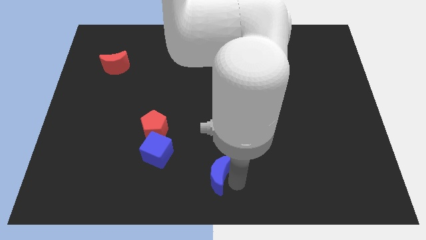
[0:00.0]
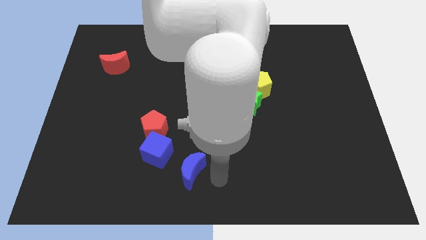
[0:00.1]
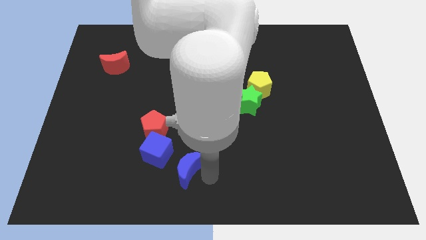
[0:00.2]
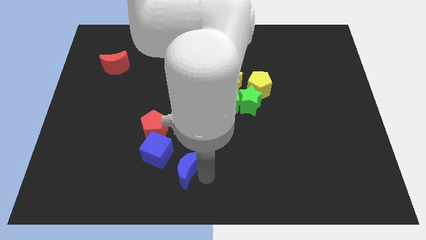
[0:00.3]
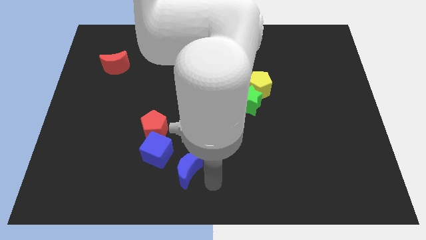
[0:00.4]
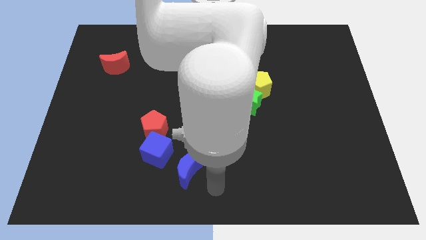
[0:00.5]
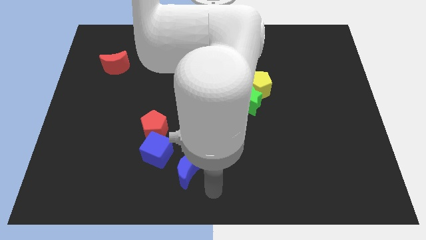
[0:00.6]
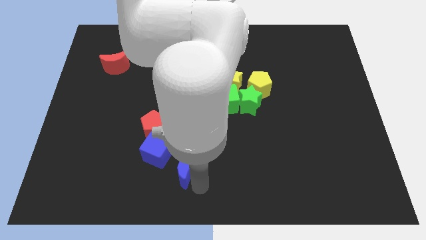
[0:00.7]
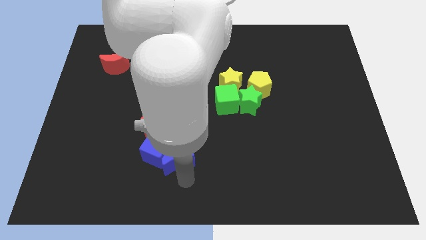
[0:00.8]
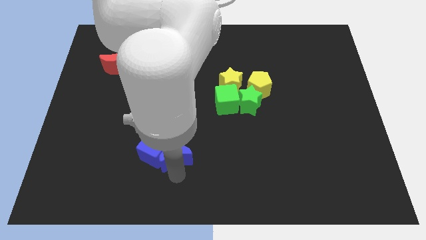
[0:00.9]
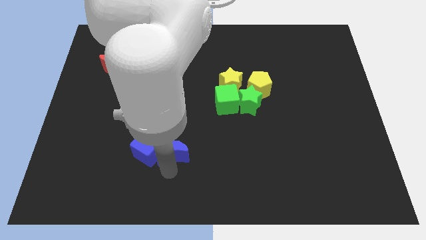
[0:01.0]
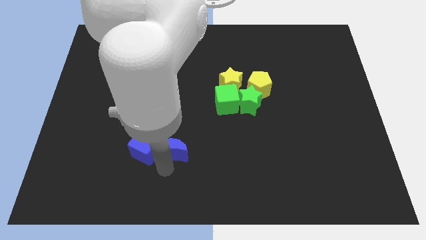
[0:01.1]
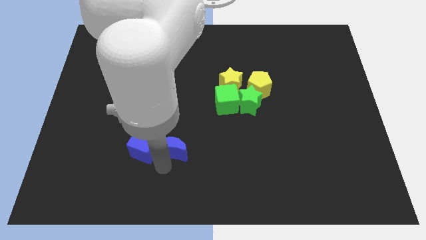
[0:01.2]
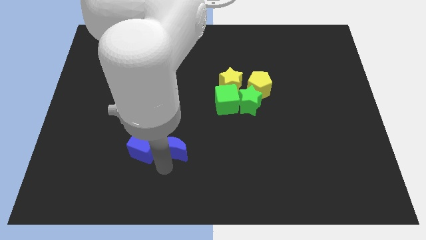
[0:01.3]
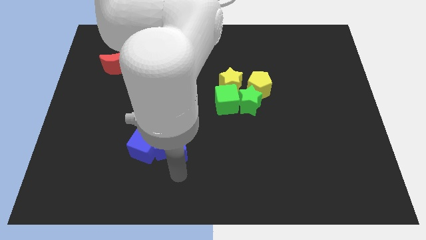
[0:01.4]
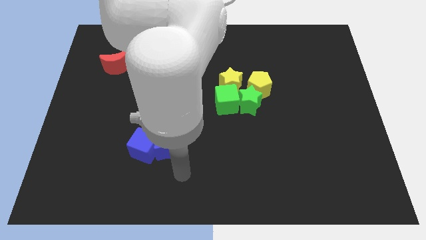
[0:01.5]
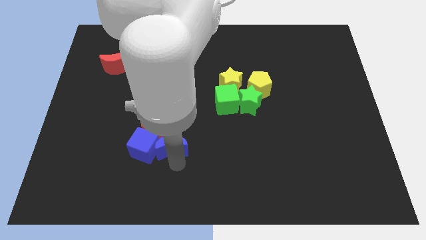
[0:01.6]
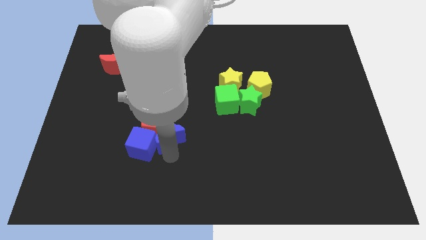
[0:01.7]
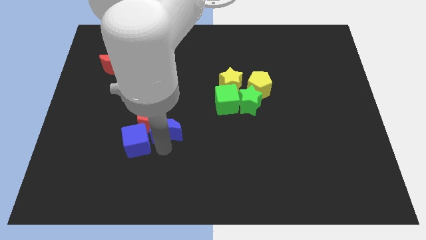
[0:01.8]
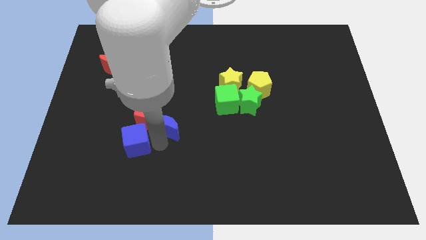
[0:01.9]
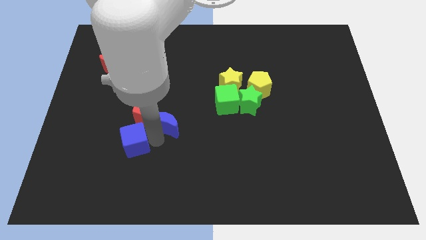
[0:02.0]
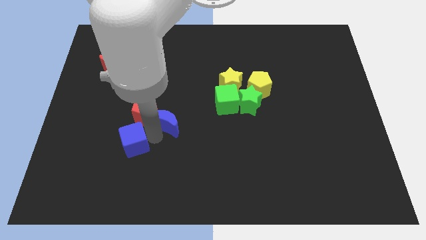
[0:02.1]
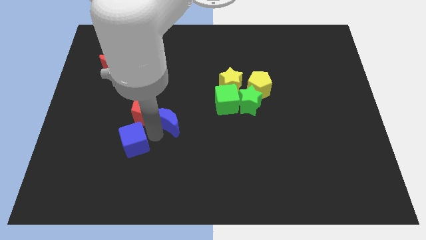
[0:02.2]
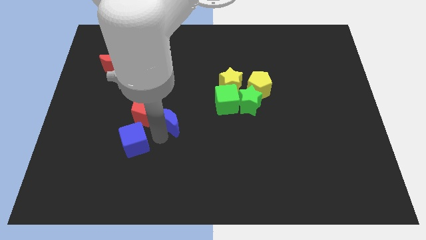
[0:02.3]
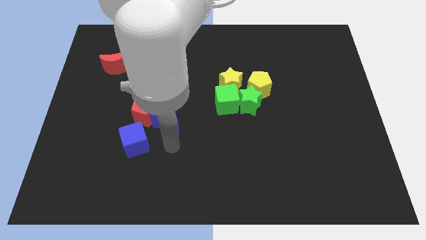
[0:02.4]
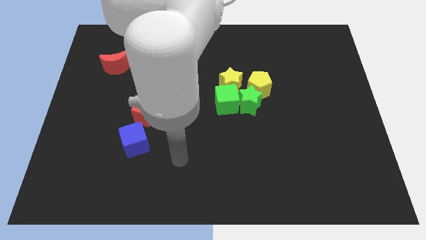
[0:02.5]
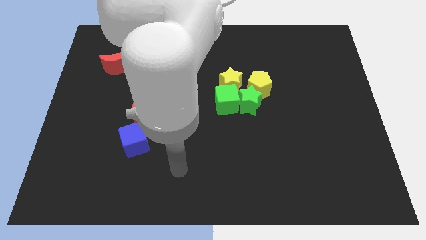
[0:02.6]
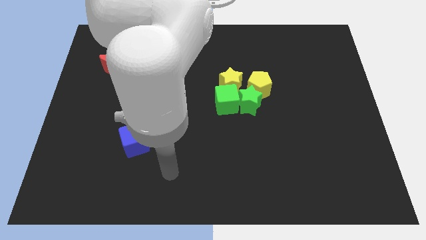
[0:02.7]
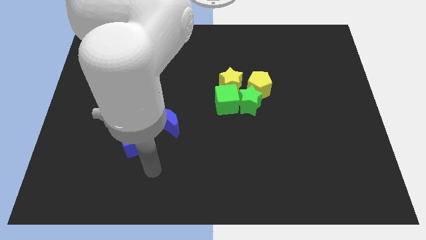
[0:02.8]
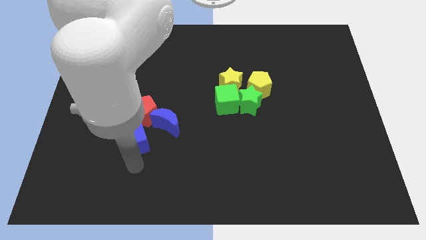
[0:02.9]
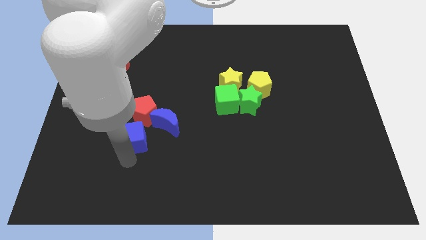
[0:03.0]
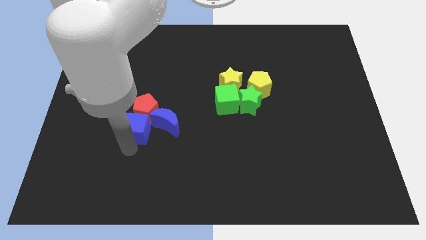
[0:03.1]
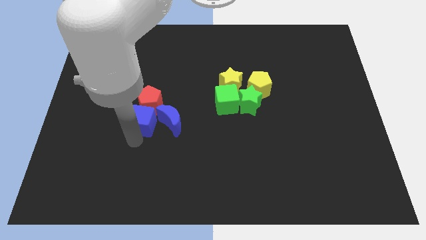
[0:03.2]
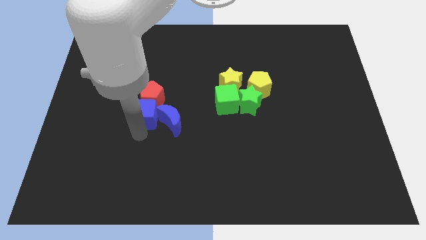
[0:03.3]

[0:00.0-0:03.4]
slide both the blue blocks along with the red pentagon towards the top side of the board

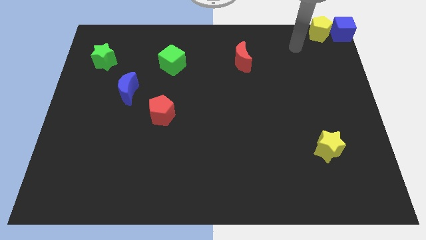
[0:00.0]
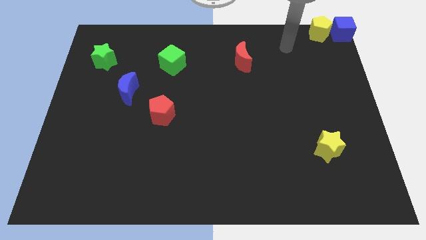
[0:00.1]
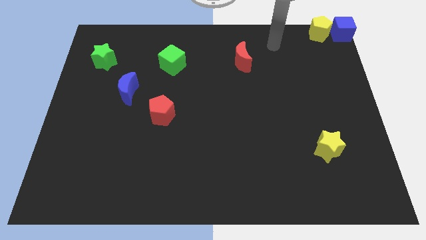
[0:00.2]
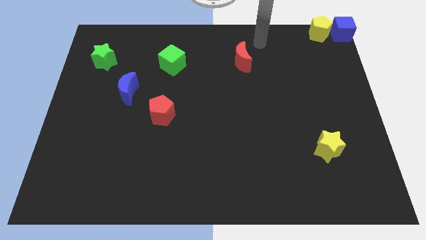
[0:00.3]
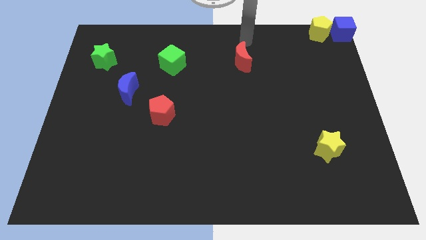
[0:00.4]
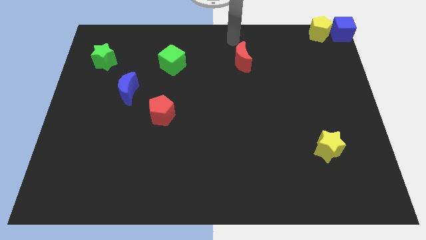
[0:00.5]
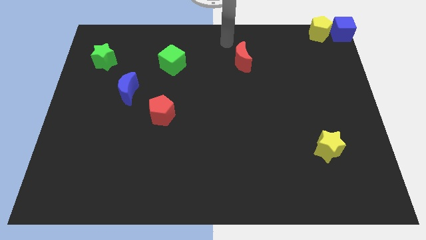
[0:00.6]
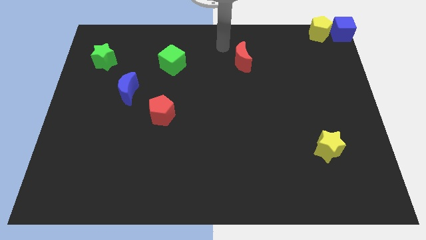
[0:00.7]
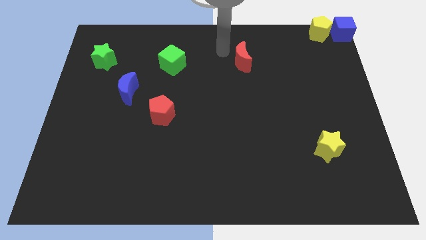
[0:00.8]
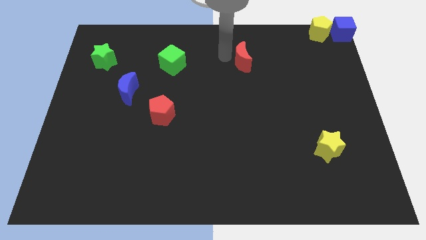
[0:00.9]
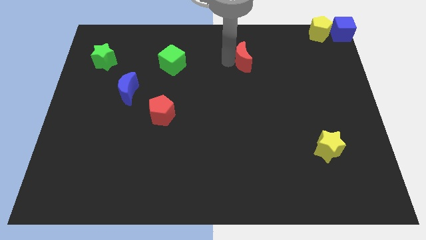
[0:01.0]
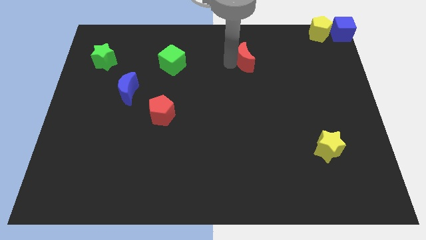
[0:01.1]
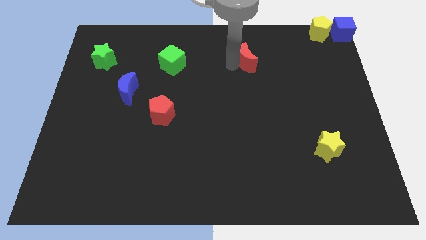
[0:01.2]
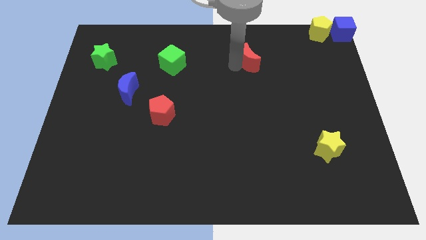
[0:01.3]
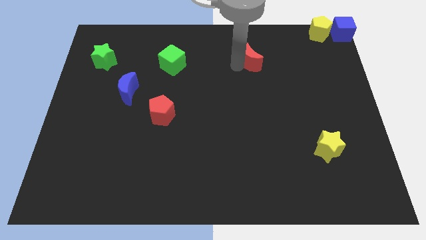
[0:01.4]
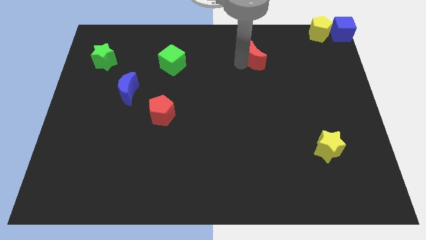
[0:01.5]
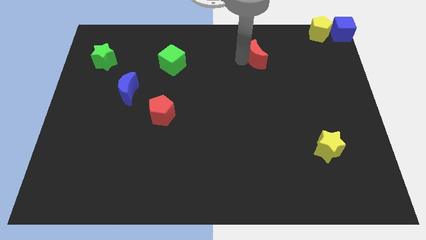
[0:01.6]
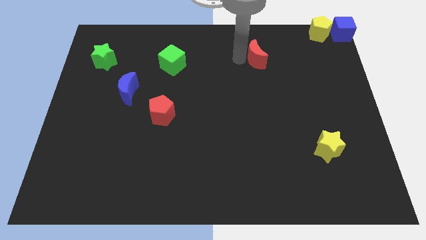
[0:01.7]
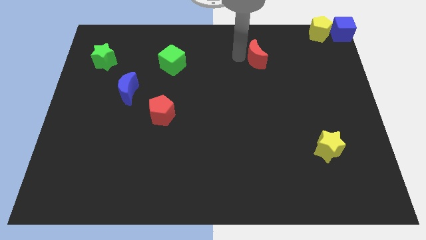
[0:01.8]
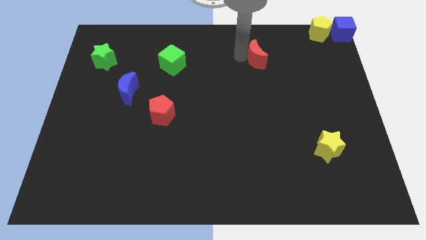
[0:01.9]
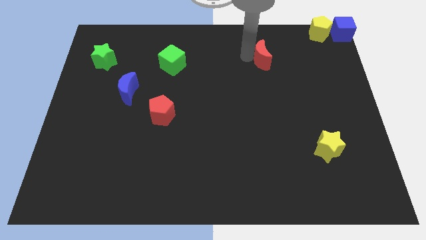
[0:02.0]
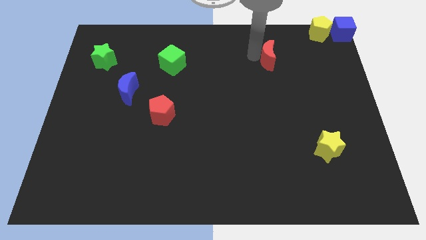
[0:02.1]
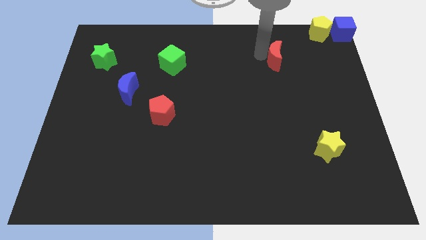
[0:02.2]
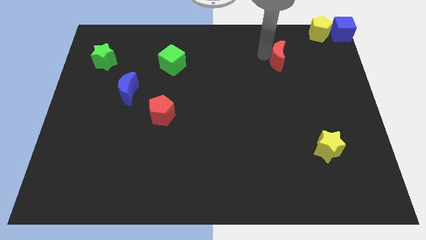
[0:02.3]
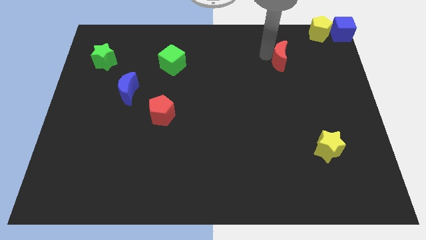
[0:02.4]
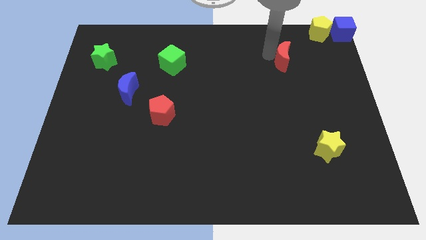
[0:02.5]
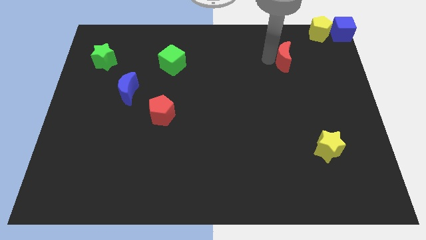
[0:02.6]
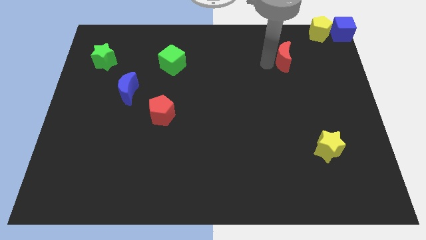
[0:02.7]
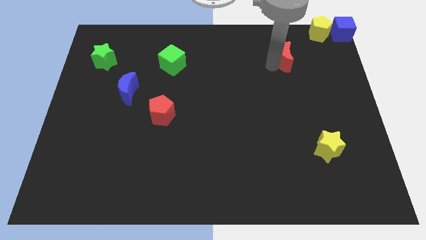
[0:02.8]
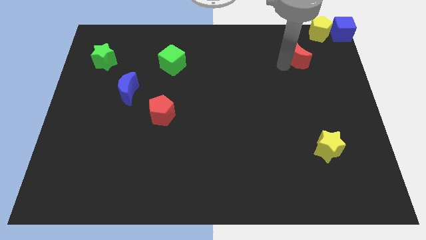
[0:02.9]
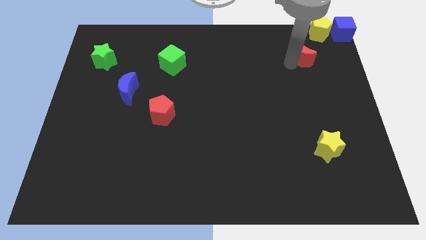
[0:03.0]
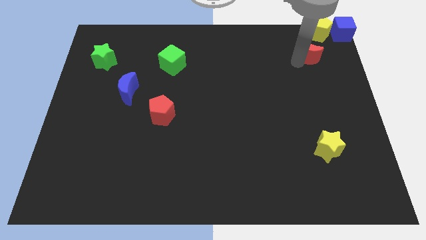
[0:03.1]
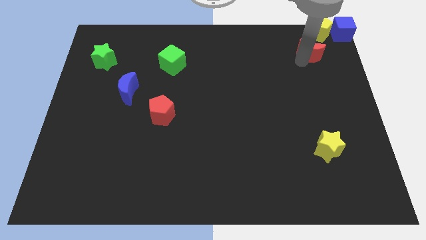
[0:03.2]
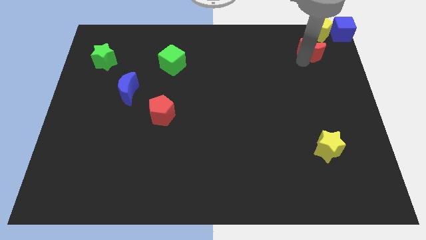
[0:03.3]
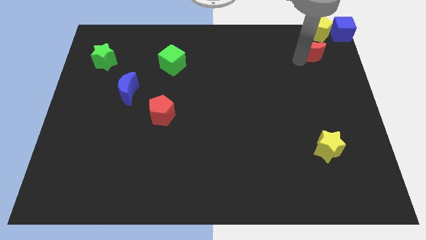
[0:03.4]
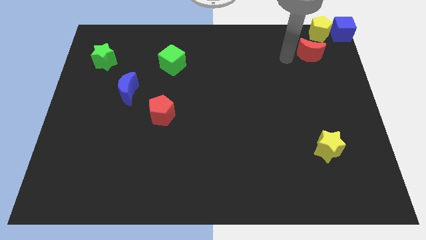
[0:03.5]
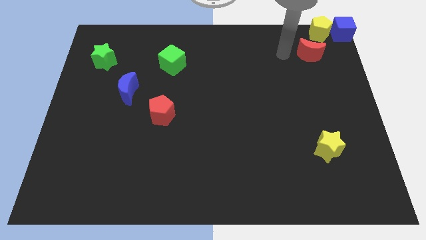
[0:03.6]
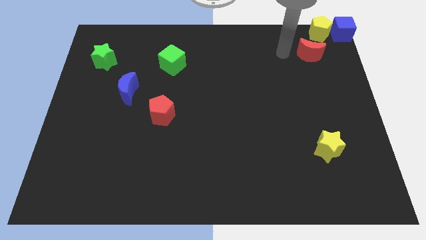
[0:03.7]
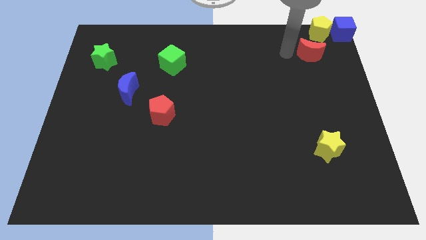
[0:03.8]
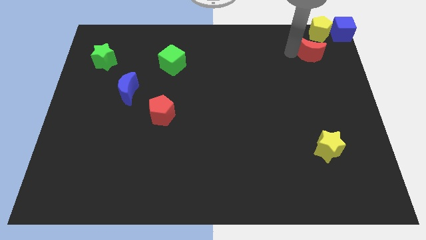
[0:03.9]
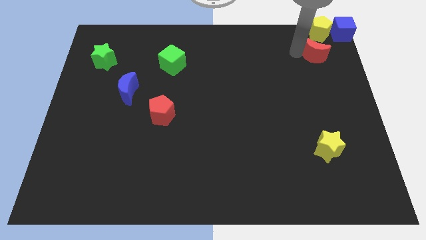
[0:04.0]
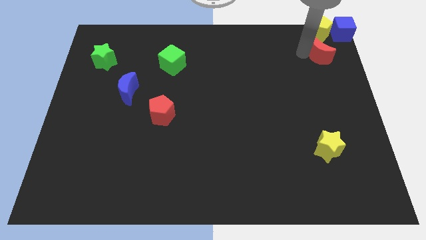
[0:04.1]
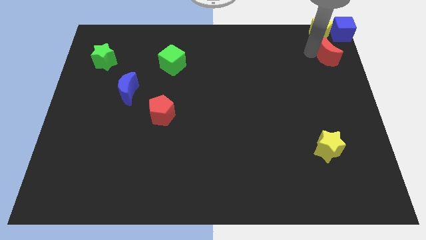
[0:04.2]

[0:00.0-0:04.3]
move the red moon to the bottom side of the yellow pentagon

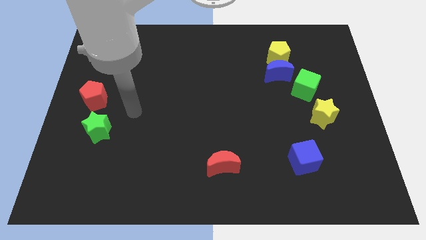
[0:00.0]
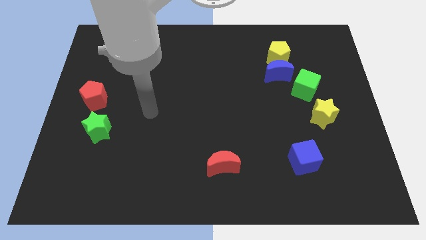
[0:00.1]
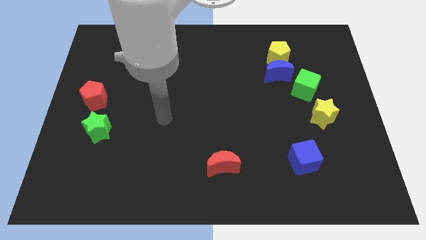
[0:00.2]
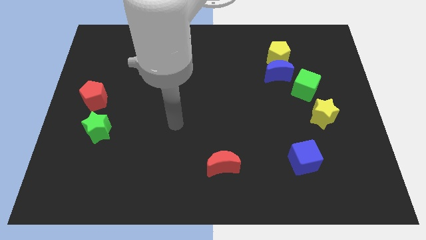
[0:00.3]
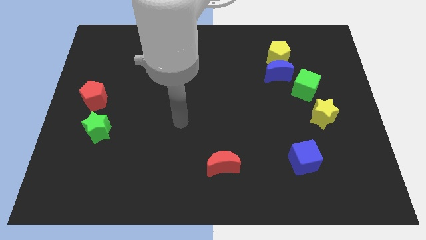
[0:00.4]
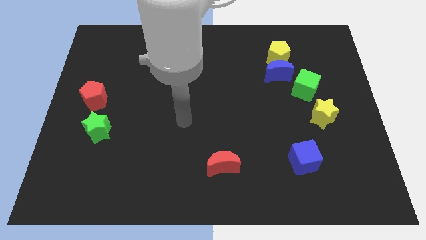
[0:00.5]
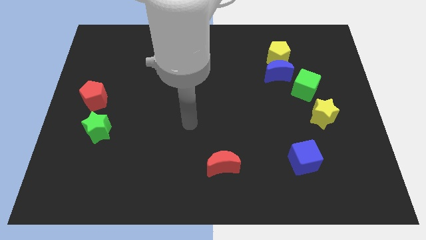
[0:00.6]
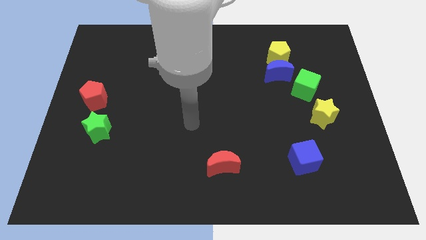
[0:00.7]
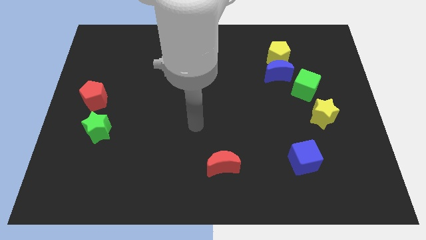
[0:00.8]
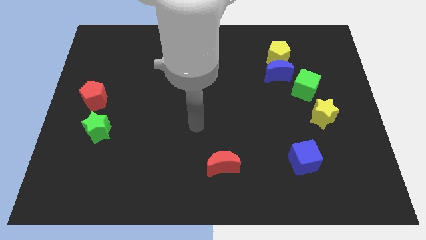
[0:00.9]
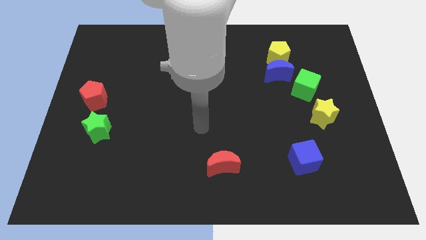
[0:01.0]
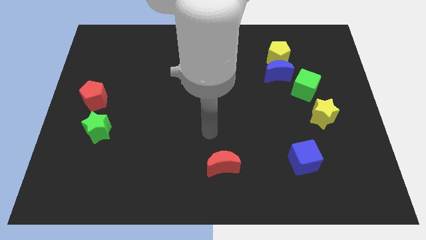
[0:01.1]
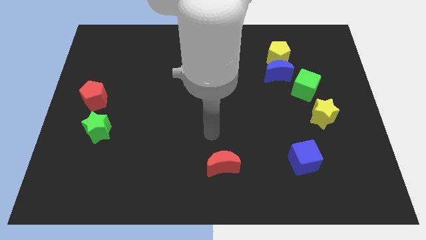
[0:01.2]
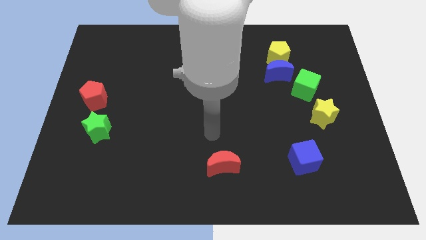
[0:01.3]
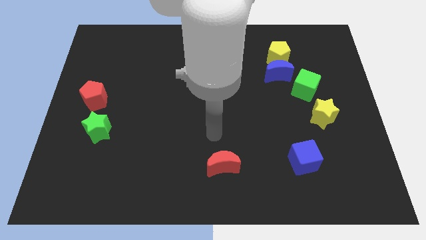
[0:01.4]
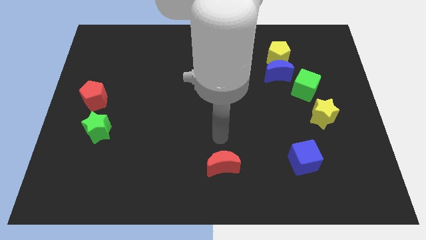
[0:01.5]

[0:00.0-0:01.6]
point your hand above the red crescent
